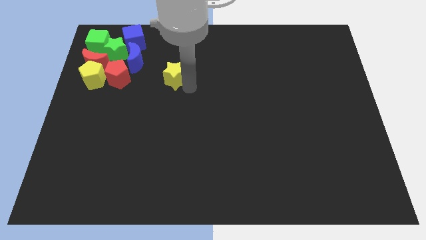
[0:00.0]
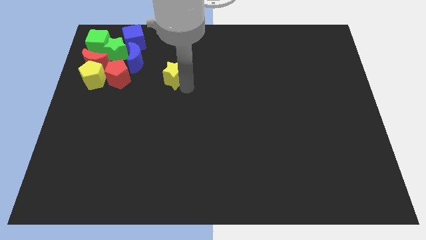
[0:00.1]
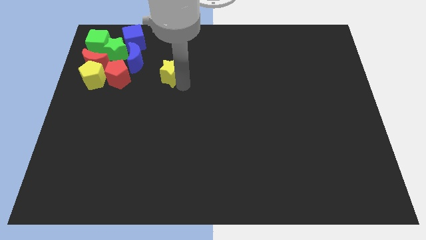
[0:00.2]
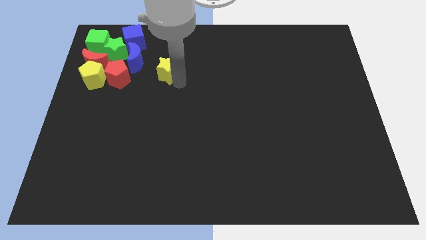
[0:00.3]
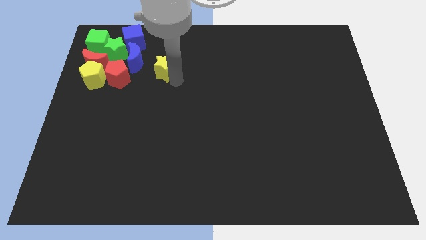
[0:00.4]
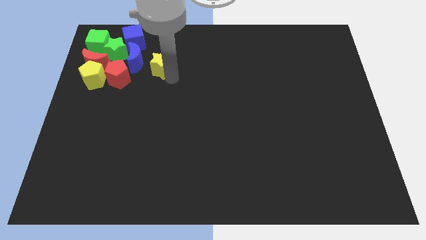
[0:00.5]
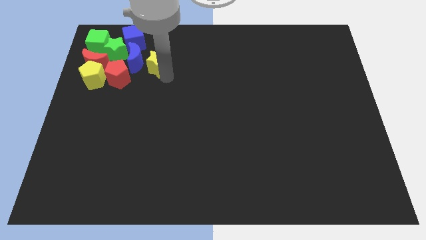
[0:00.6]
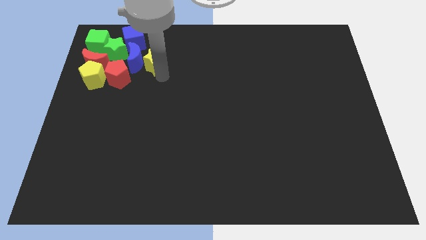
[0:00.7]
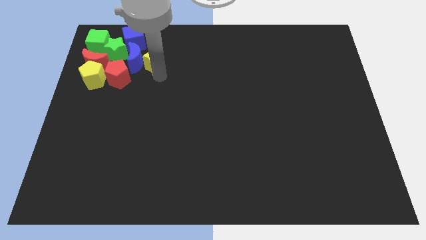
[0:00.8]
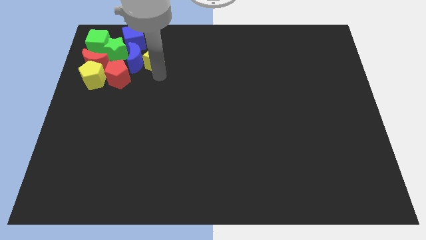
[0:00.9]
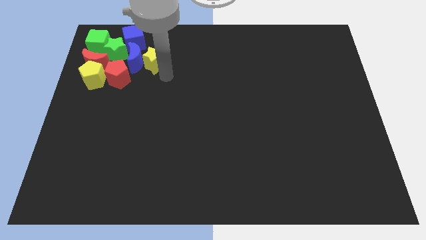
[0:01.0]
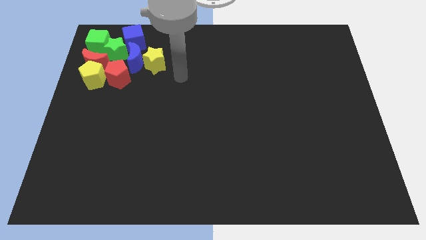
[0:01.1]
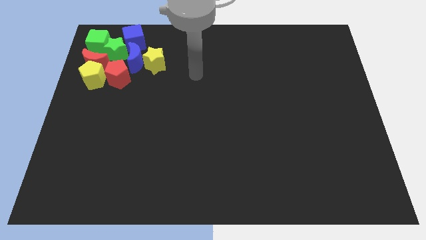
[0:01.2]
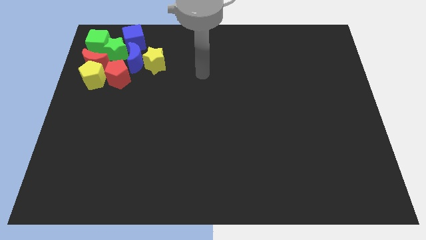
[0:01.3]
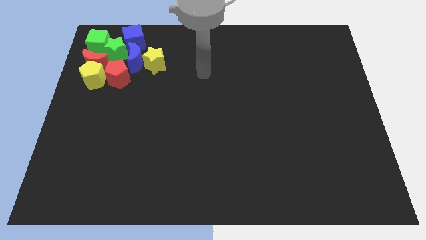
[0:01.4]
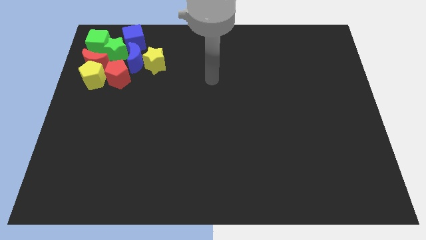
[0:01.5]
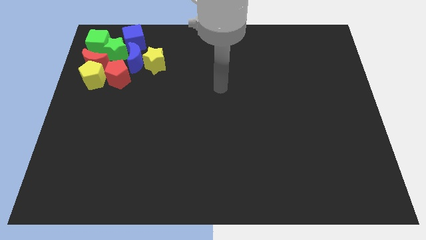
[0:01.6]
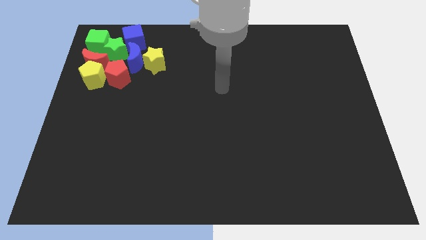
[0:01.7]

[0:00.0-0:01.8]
slide the yellow star to the right side of the blue crescent

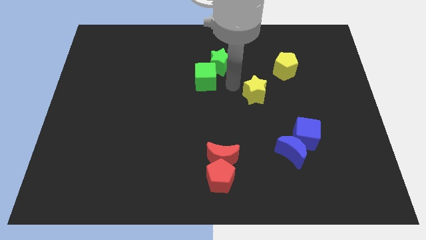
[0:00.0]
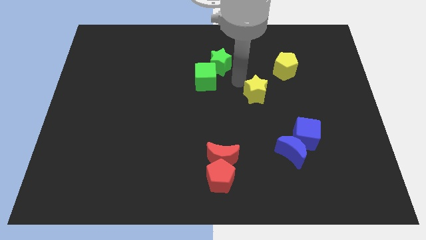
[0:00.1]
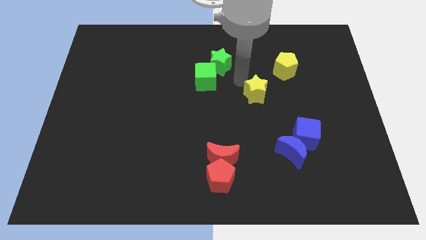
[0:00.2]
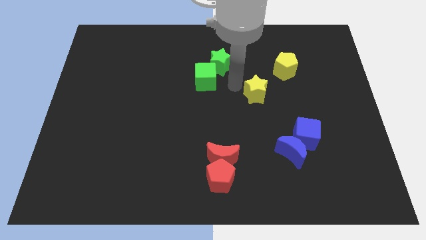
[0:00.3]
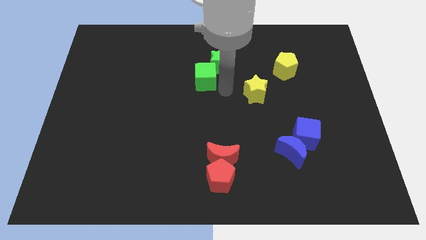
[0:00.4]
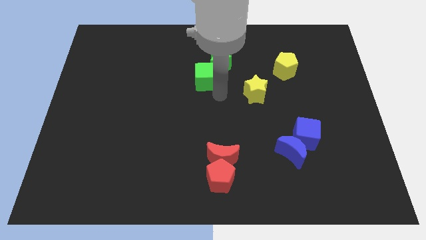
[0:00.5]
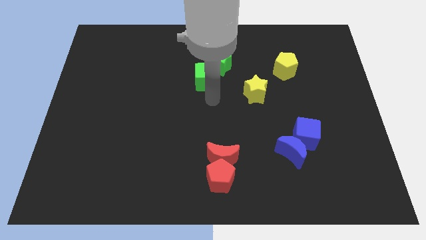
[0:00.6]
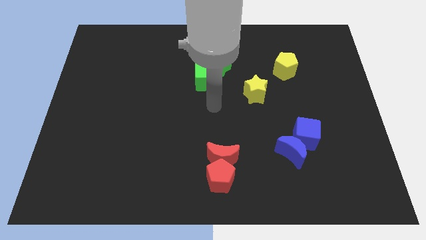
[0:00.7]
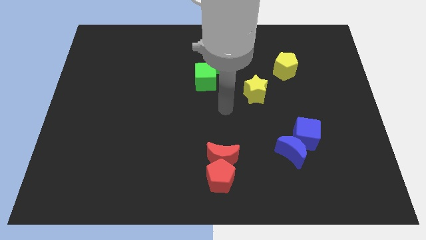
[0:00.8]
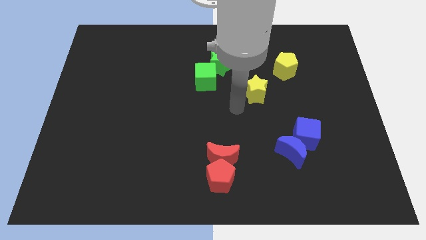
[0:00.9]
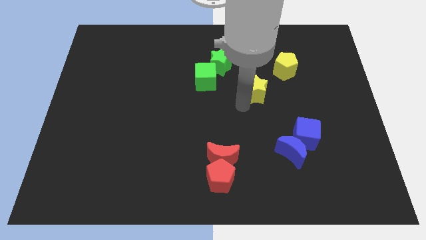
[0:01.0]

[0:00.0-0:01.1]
move the yellow star towards the yellow pentagon

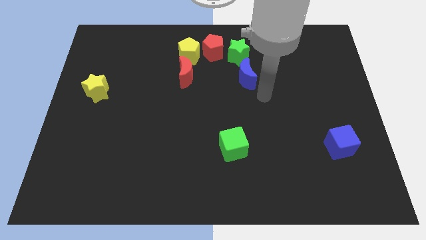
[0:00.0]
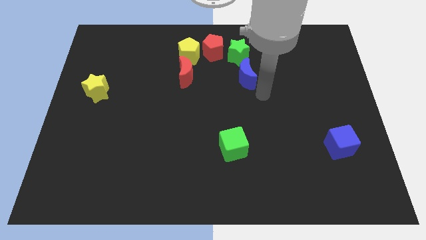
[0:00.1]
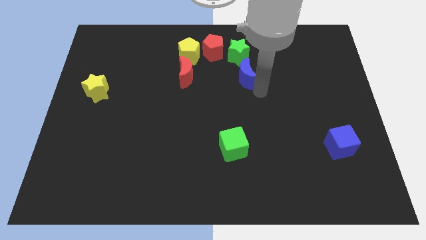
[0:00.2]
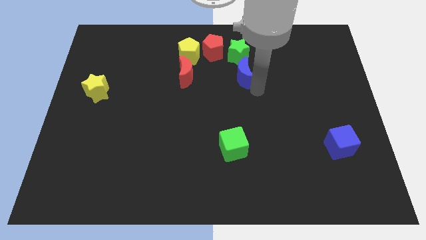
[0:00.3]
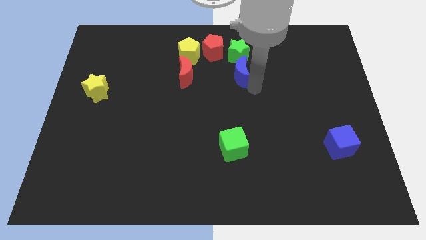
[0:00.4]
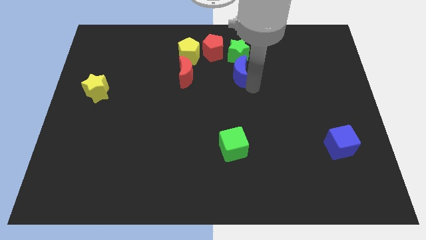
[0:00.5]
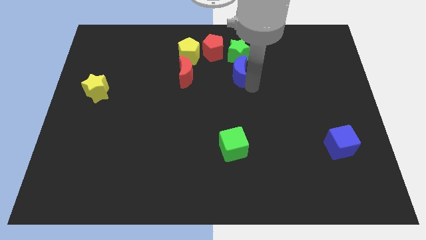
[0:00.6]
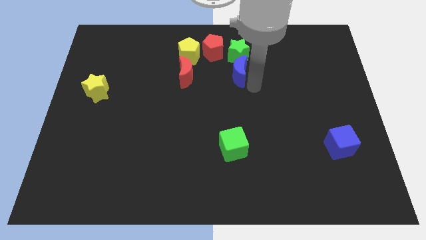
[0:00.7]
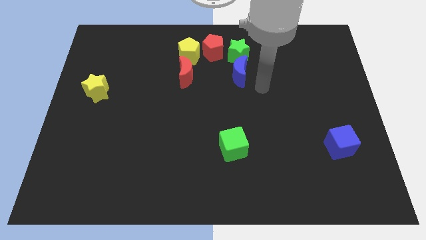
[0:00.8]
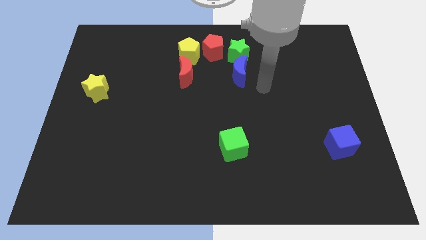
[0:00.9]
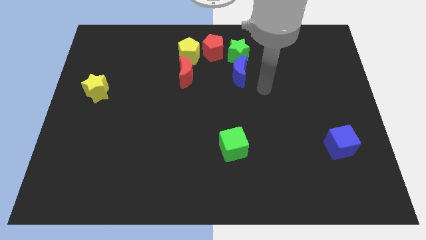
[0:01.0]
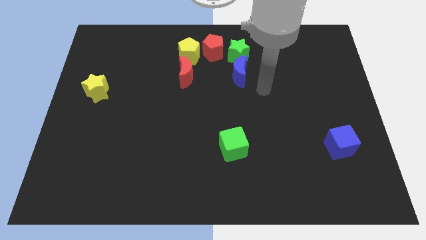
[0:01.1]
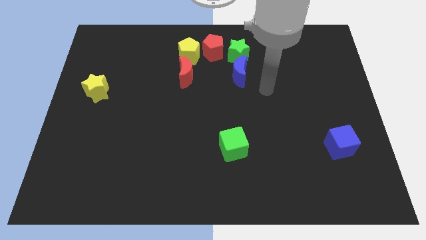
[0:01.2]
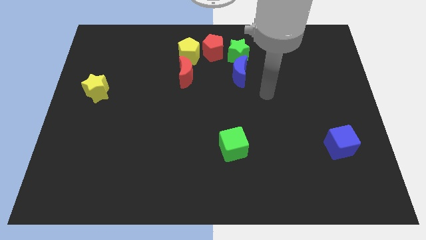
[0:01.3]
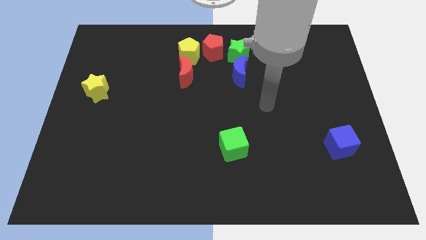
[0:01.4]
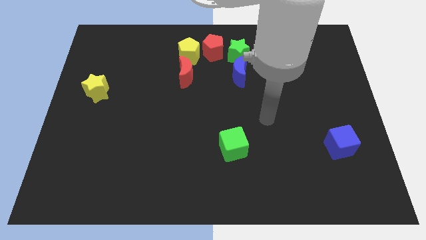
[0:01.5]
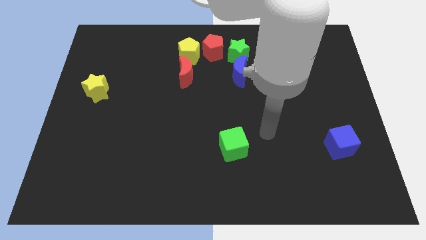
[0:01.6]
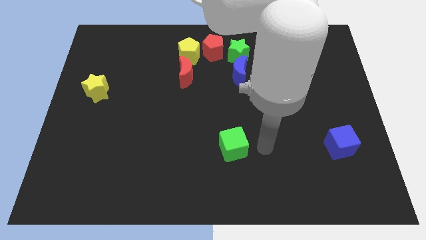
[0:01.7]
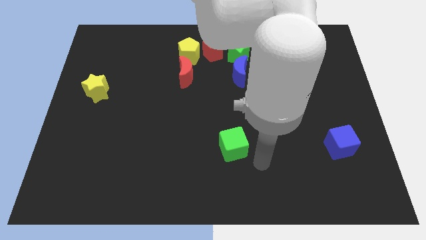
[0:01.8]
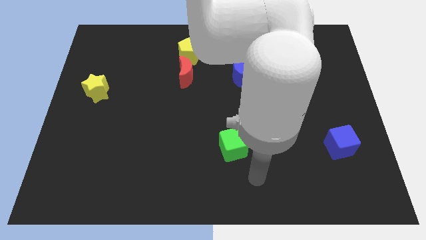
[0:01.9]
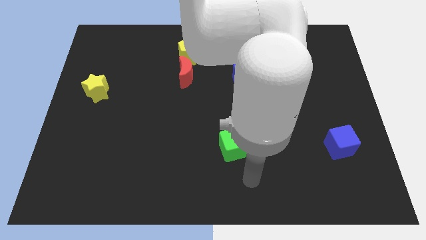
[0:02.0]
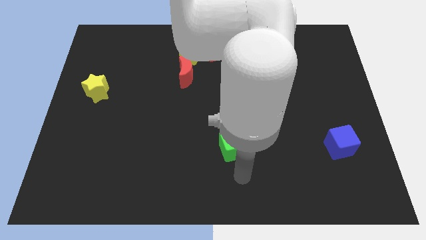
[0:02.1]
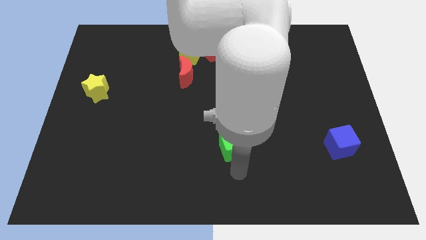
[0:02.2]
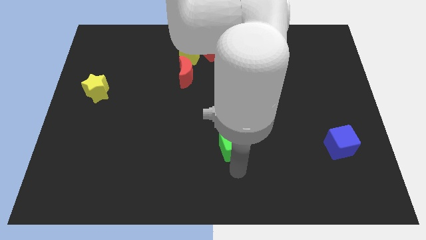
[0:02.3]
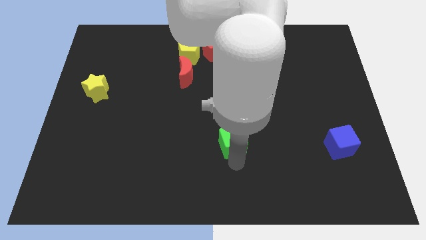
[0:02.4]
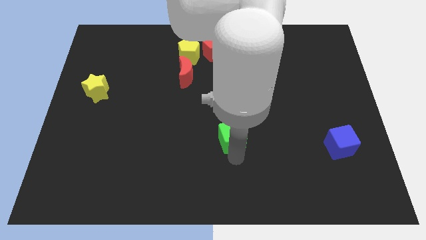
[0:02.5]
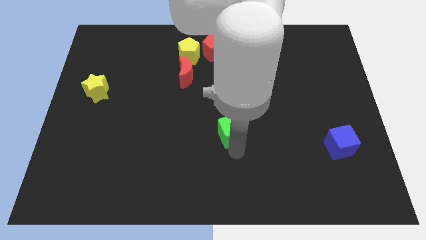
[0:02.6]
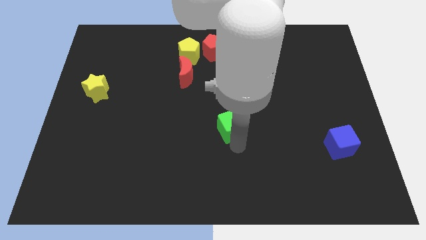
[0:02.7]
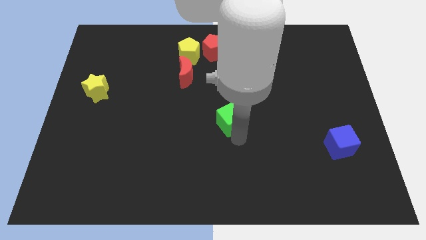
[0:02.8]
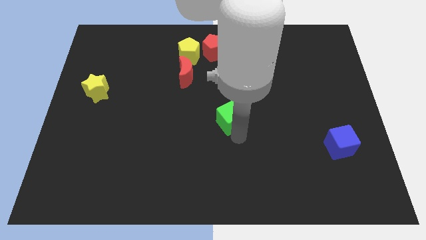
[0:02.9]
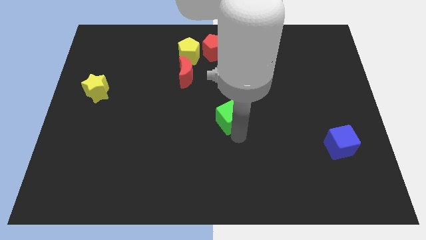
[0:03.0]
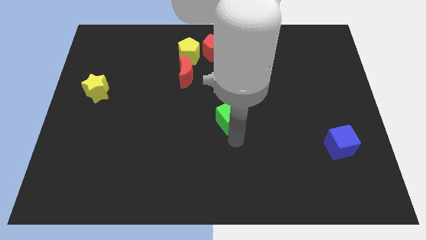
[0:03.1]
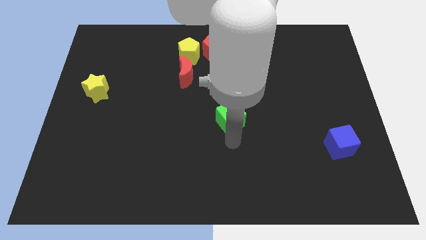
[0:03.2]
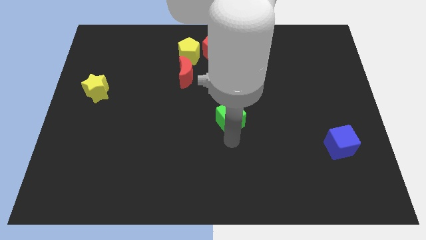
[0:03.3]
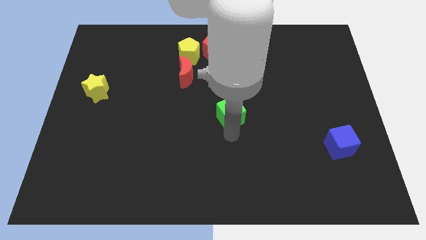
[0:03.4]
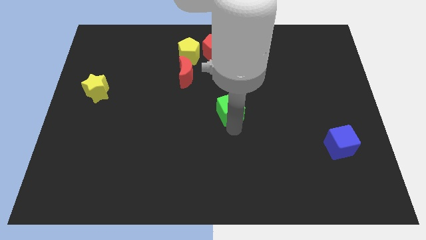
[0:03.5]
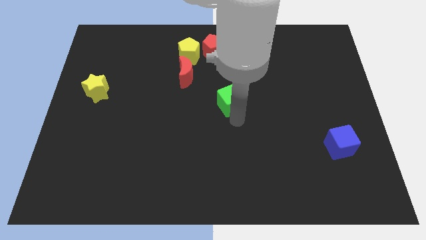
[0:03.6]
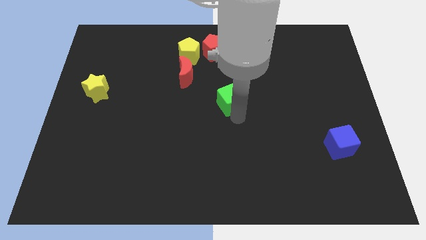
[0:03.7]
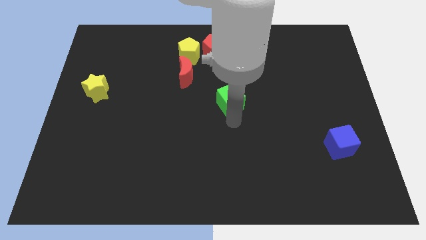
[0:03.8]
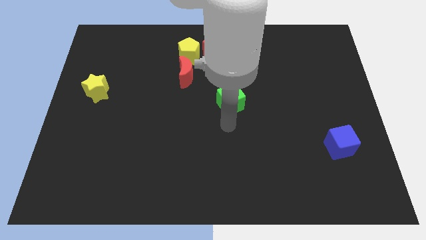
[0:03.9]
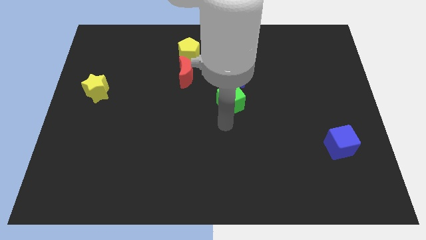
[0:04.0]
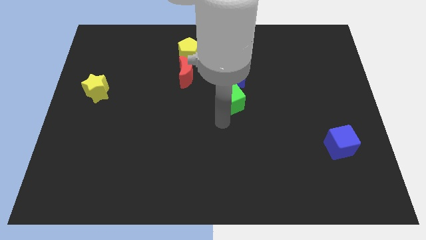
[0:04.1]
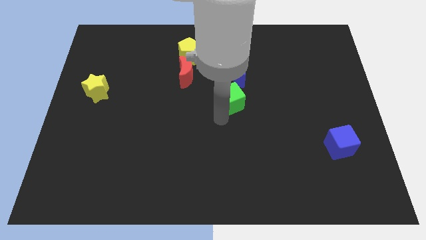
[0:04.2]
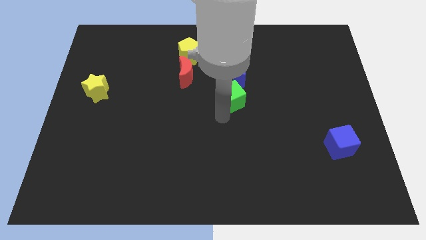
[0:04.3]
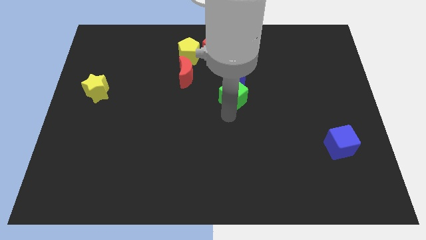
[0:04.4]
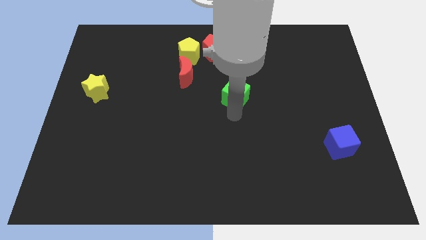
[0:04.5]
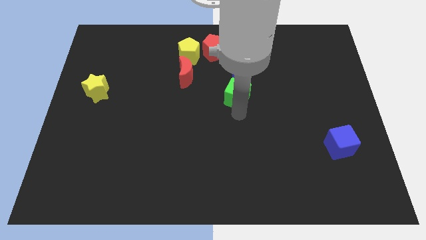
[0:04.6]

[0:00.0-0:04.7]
move the green cube towards the blue crescent

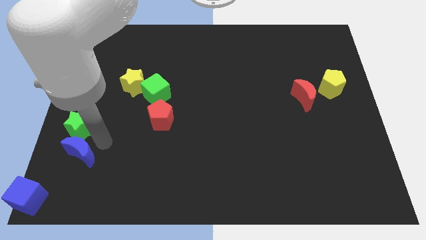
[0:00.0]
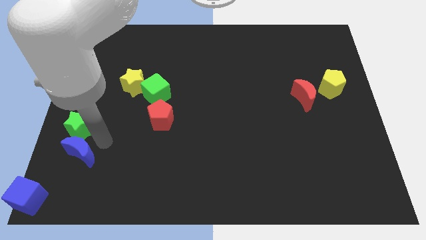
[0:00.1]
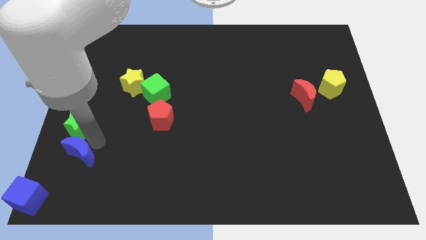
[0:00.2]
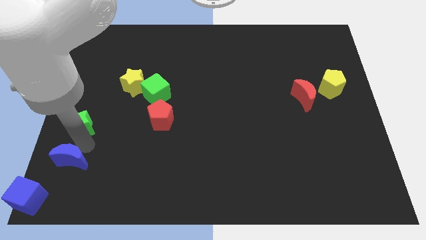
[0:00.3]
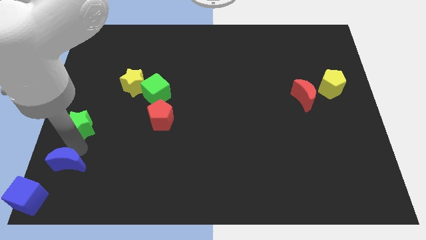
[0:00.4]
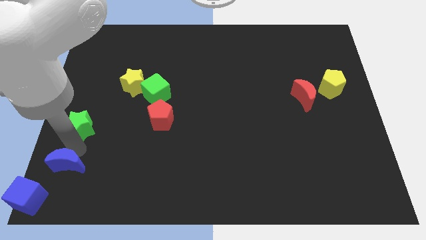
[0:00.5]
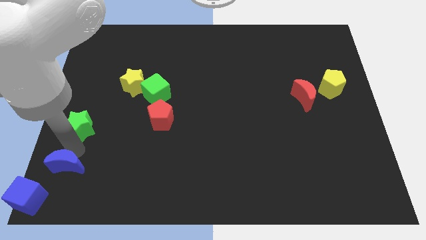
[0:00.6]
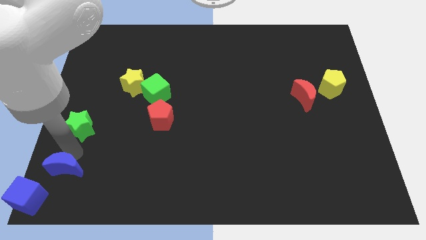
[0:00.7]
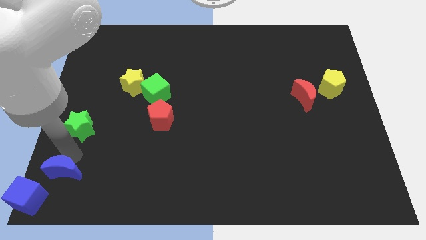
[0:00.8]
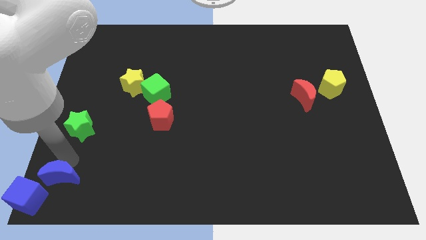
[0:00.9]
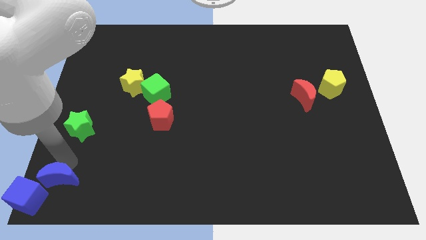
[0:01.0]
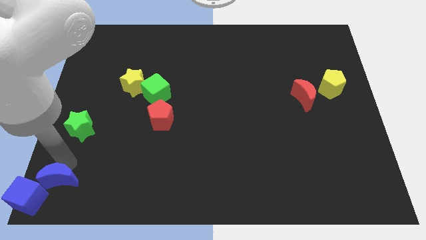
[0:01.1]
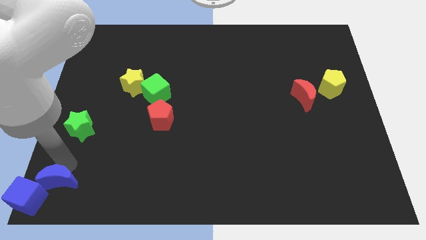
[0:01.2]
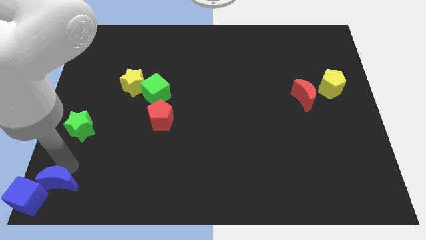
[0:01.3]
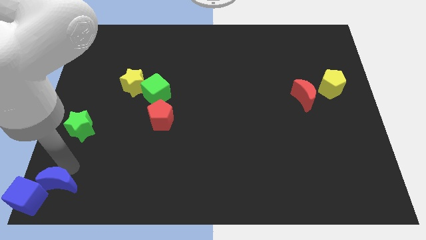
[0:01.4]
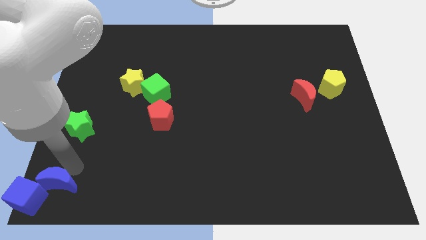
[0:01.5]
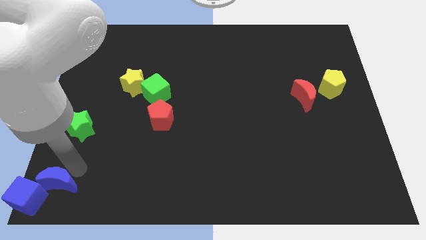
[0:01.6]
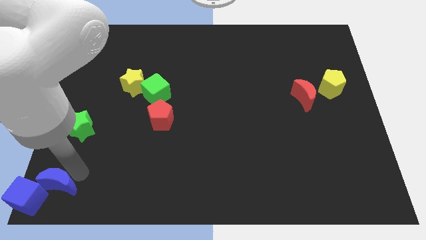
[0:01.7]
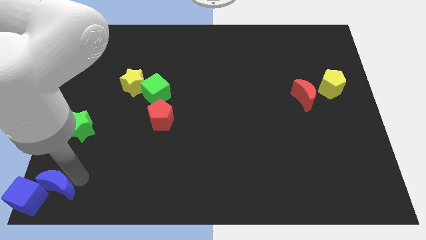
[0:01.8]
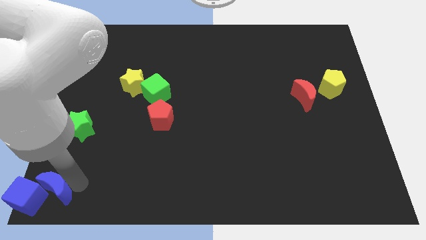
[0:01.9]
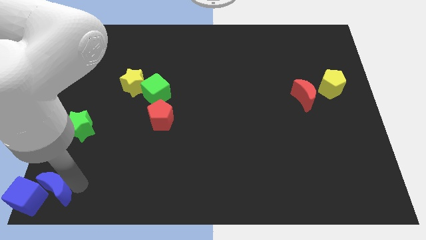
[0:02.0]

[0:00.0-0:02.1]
drag the blue moon to the top right of the blue square
